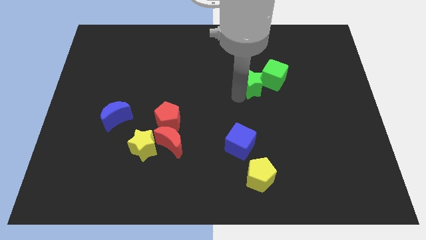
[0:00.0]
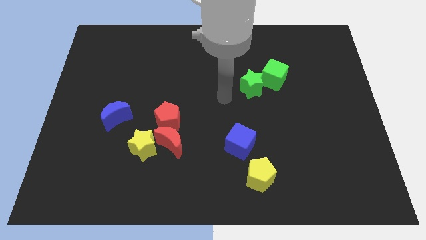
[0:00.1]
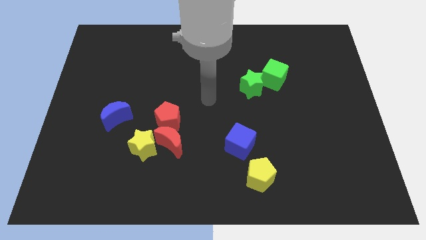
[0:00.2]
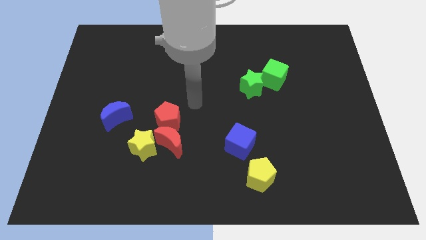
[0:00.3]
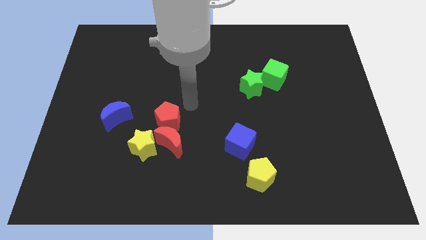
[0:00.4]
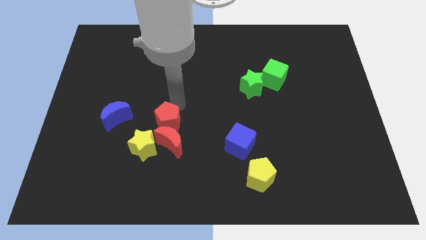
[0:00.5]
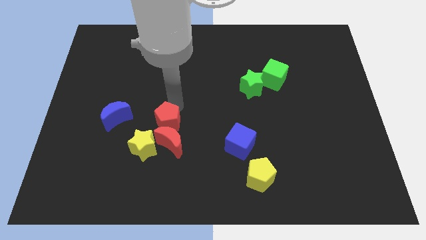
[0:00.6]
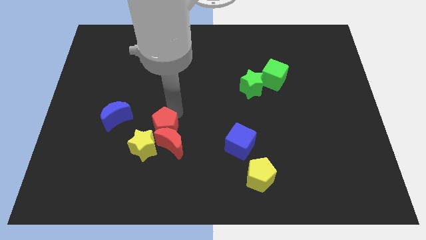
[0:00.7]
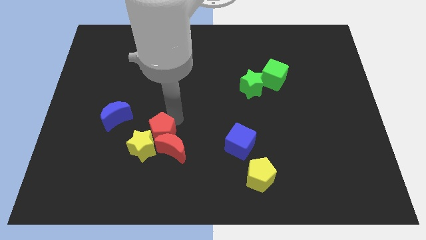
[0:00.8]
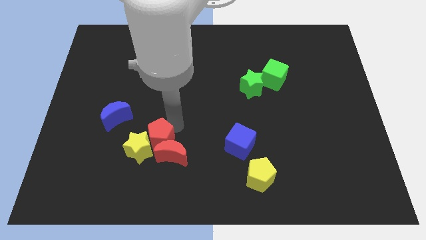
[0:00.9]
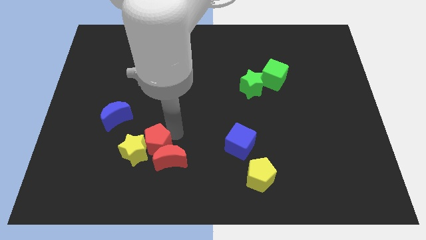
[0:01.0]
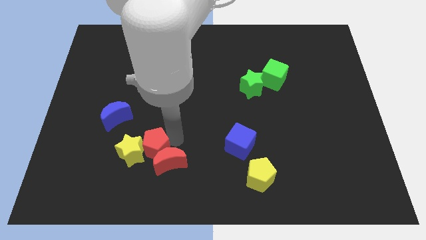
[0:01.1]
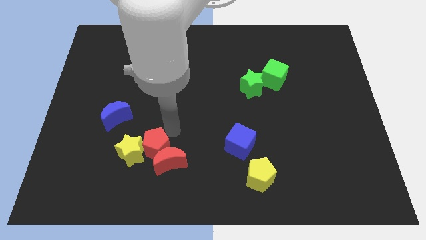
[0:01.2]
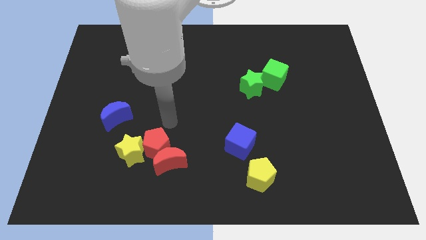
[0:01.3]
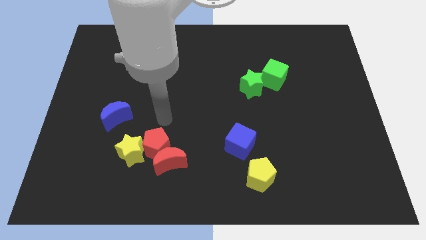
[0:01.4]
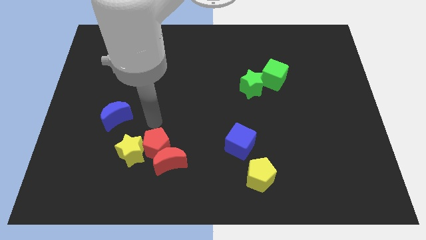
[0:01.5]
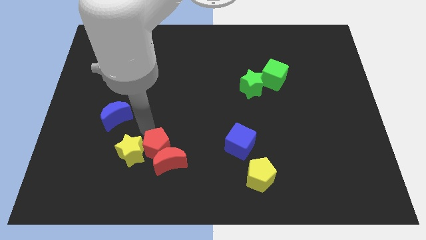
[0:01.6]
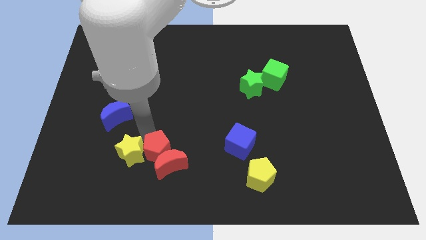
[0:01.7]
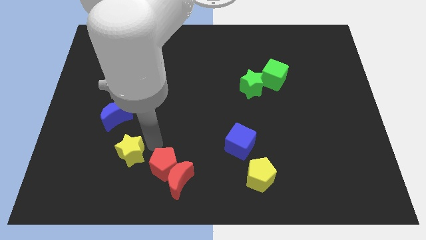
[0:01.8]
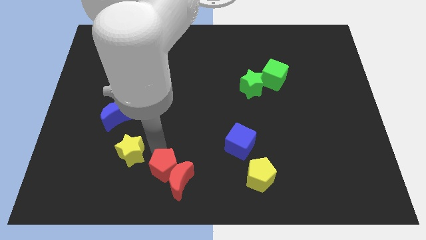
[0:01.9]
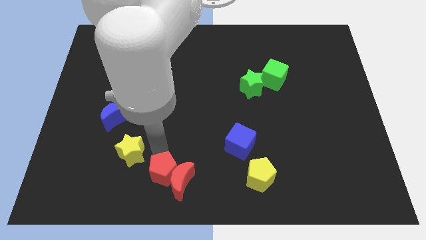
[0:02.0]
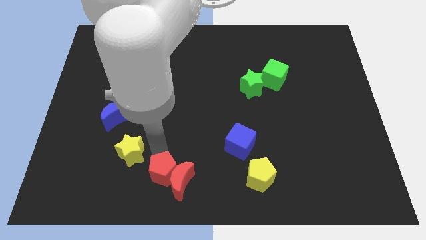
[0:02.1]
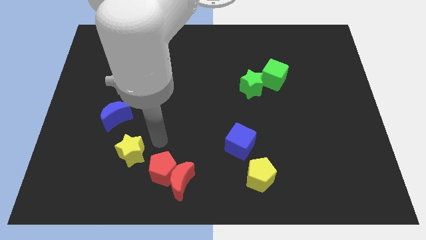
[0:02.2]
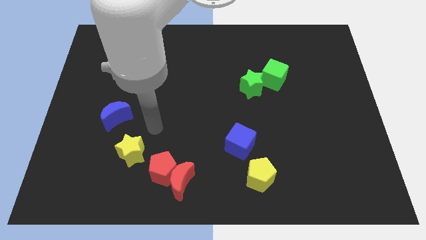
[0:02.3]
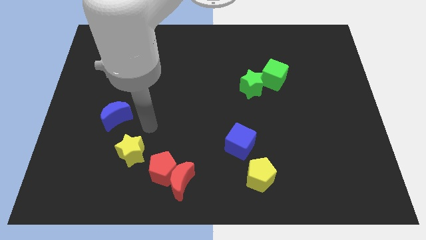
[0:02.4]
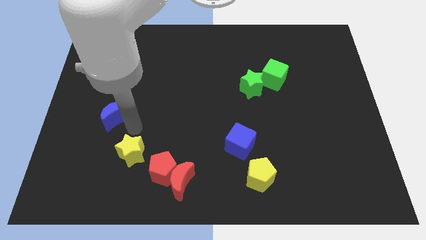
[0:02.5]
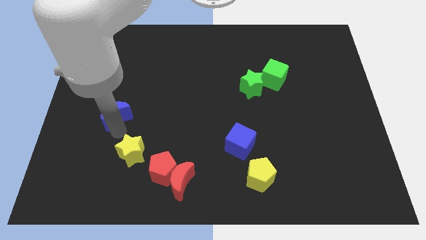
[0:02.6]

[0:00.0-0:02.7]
move your arm away from the green star

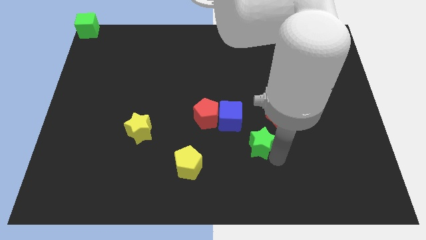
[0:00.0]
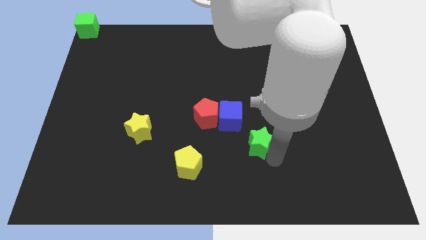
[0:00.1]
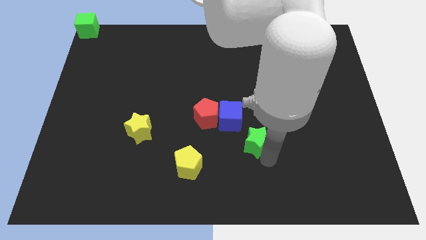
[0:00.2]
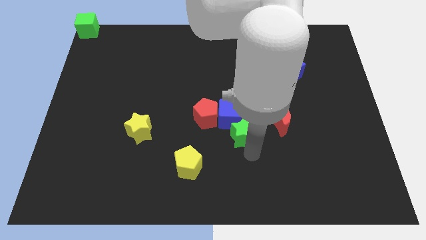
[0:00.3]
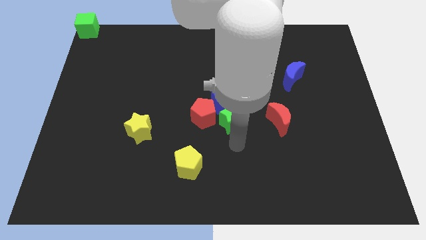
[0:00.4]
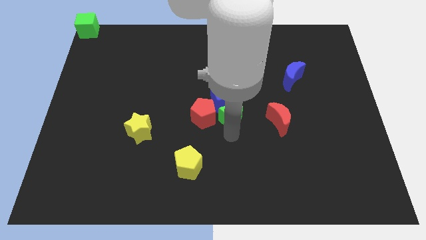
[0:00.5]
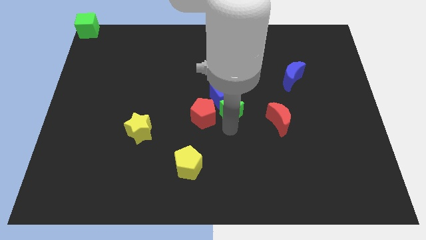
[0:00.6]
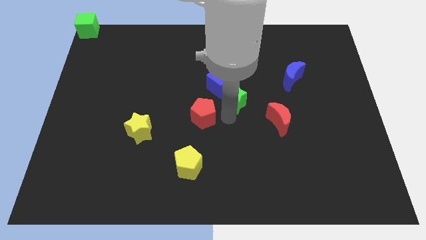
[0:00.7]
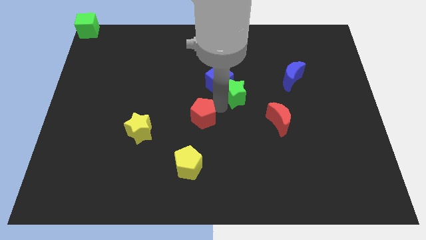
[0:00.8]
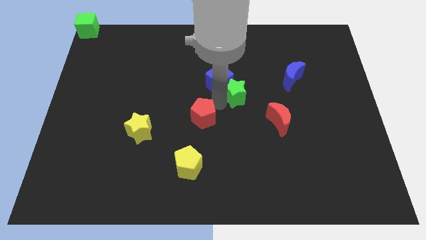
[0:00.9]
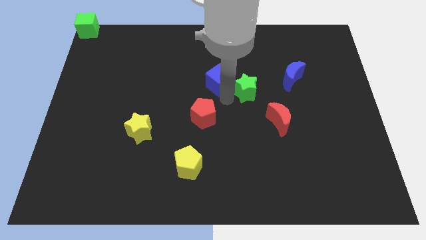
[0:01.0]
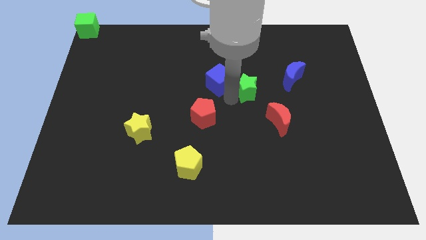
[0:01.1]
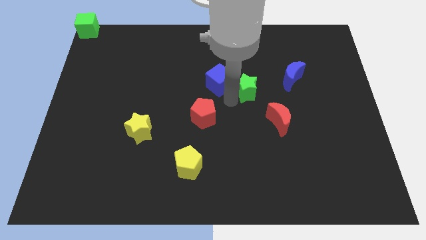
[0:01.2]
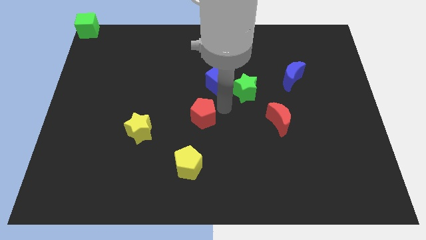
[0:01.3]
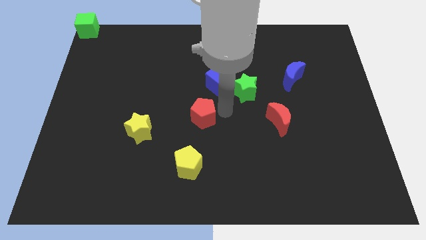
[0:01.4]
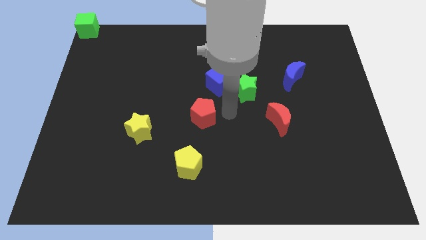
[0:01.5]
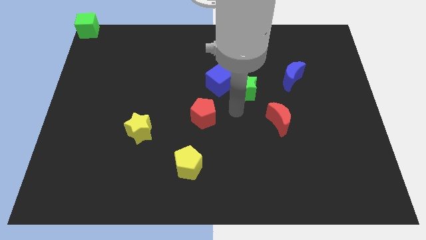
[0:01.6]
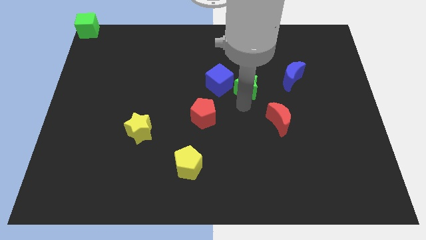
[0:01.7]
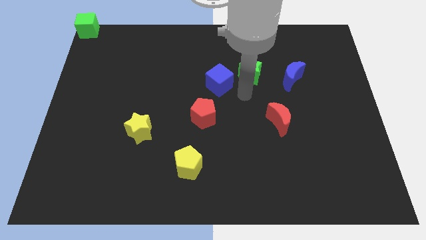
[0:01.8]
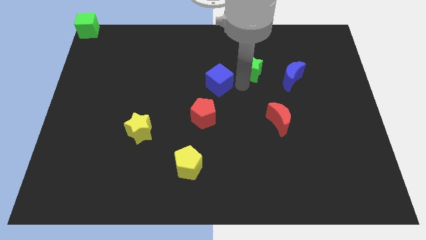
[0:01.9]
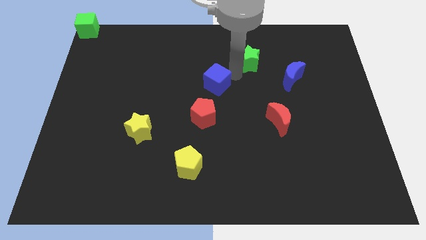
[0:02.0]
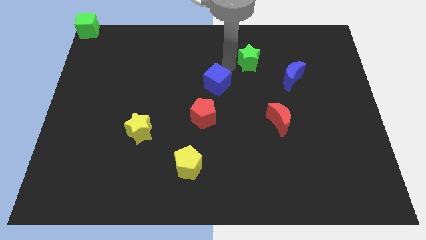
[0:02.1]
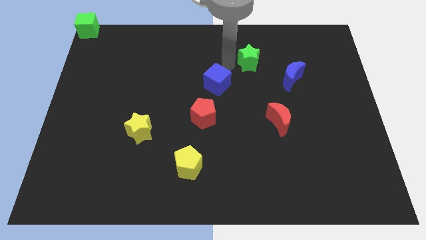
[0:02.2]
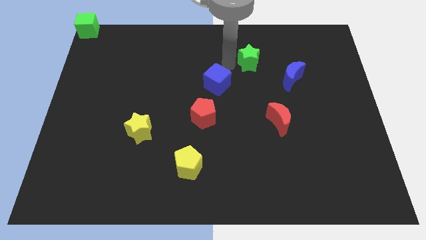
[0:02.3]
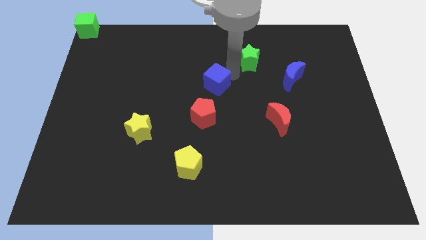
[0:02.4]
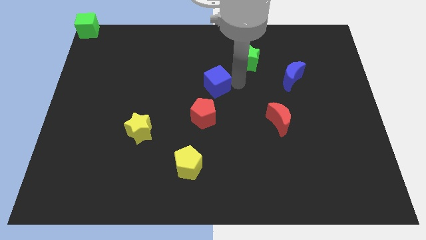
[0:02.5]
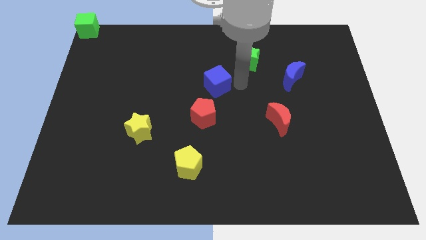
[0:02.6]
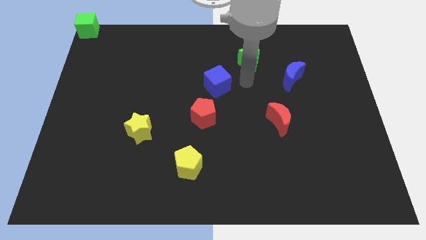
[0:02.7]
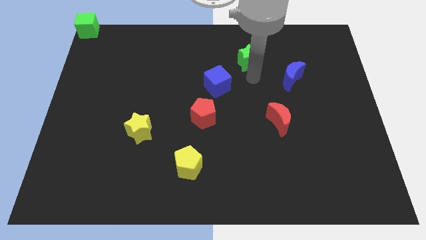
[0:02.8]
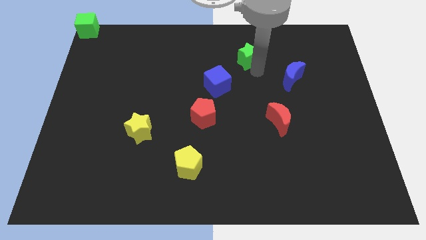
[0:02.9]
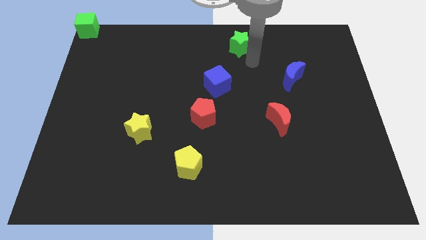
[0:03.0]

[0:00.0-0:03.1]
move green star towards top center

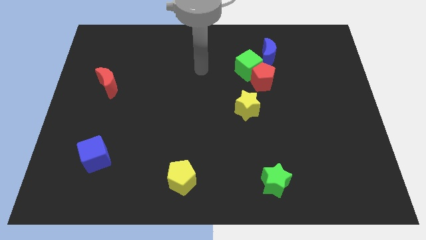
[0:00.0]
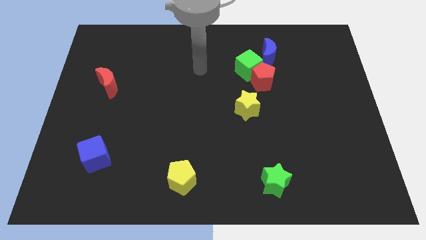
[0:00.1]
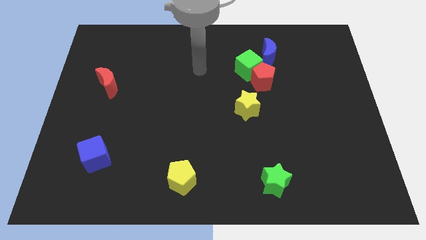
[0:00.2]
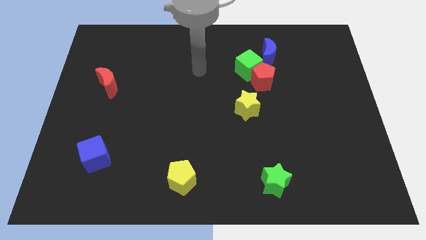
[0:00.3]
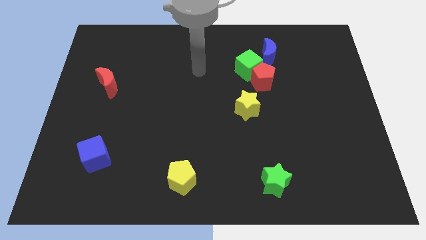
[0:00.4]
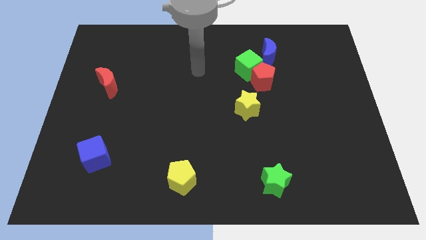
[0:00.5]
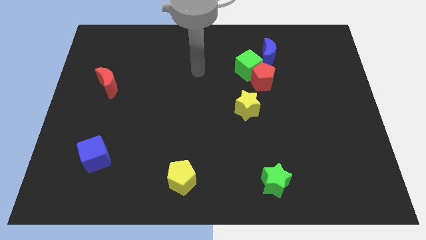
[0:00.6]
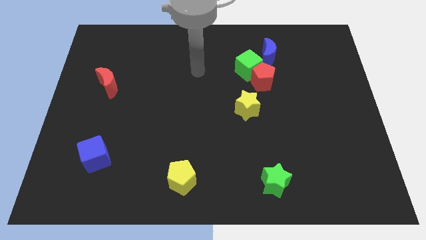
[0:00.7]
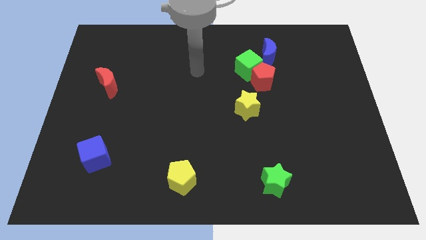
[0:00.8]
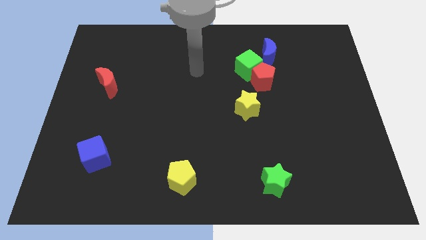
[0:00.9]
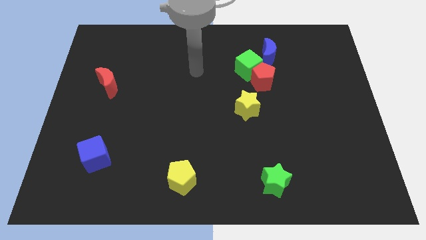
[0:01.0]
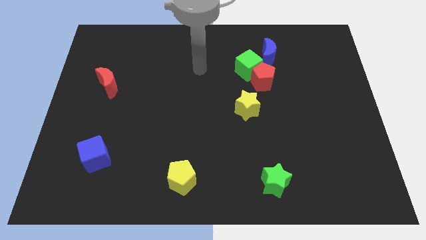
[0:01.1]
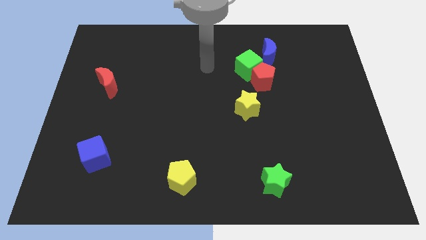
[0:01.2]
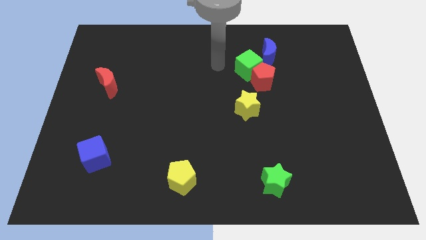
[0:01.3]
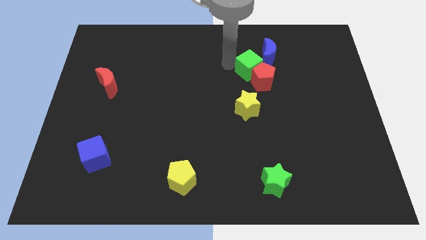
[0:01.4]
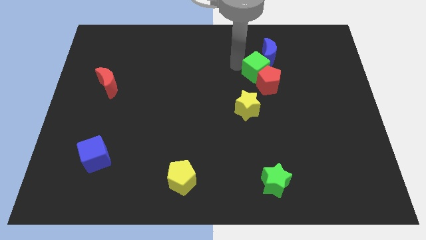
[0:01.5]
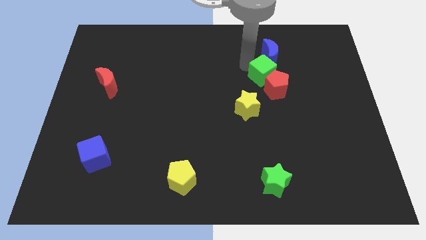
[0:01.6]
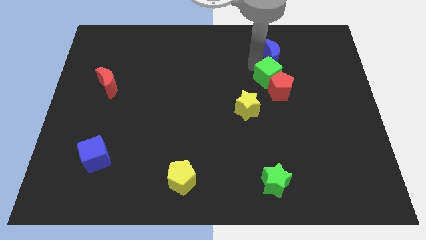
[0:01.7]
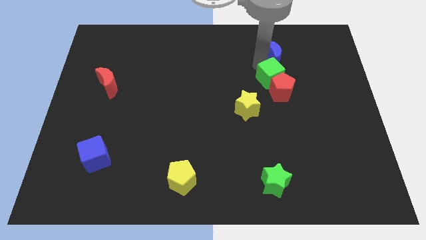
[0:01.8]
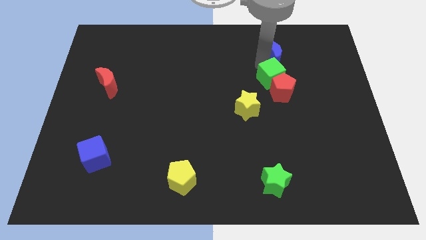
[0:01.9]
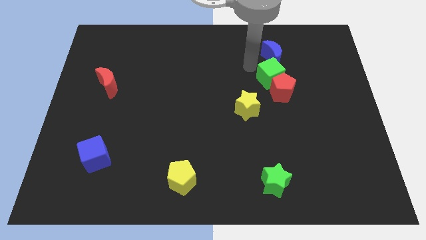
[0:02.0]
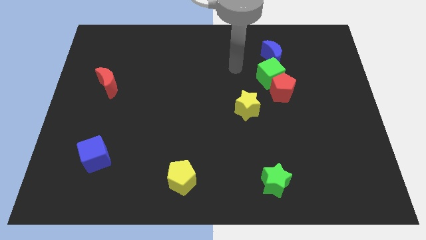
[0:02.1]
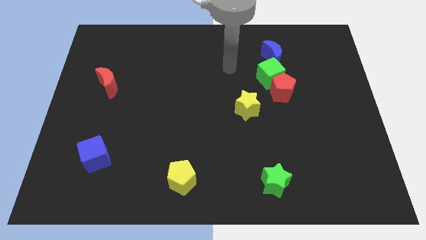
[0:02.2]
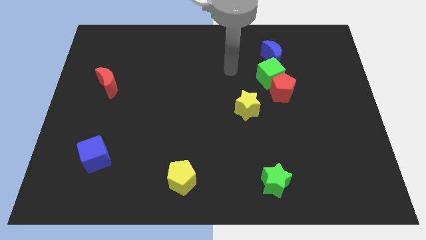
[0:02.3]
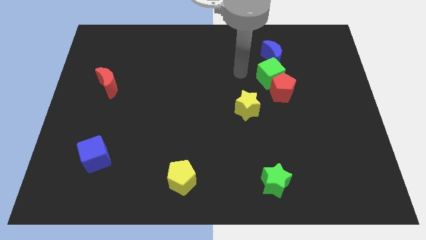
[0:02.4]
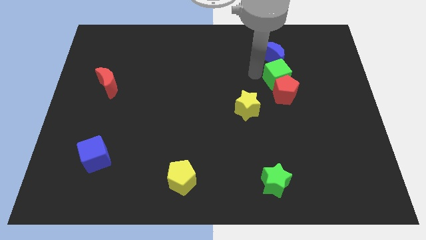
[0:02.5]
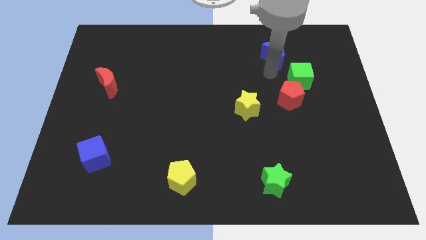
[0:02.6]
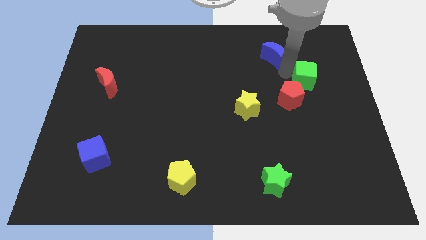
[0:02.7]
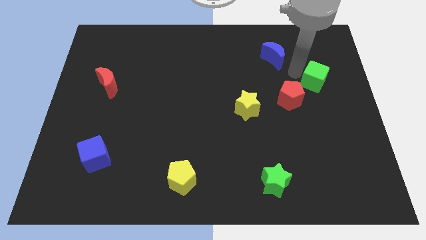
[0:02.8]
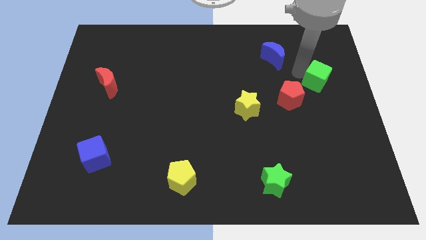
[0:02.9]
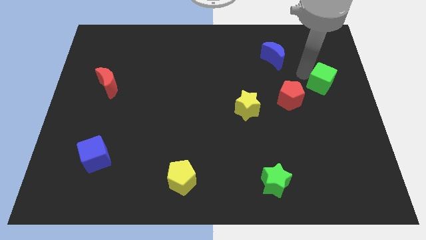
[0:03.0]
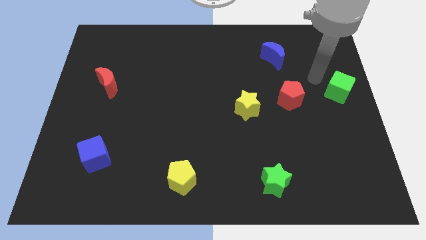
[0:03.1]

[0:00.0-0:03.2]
push the blue moon green cube and red pentagon towards the right side of the board
